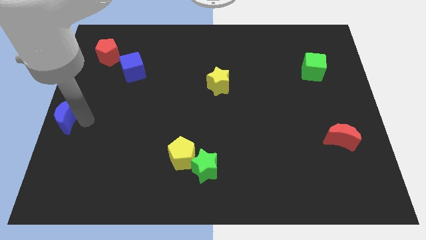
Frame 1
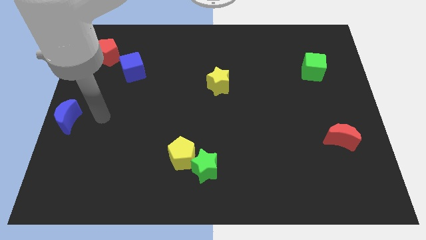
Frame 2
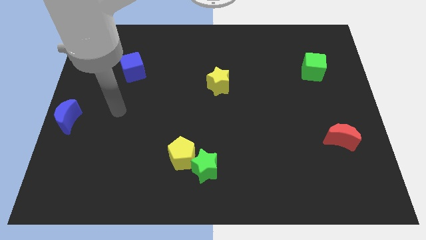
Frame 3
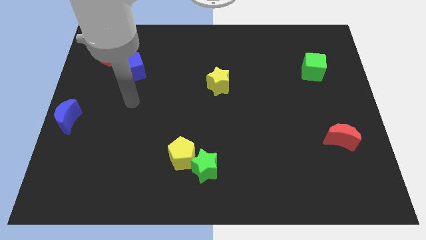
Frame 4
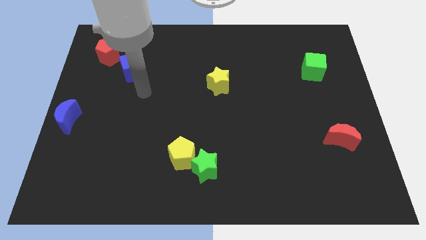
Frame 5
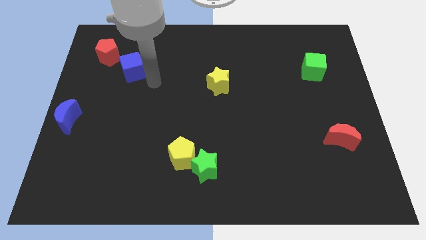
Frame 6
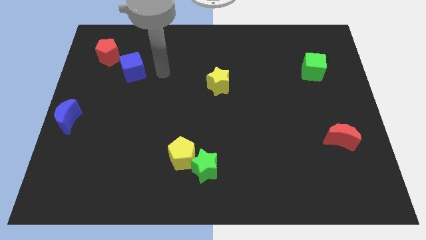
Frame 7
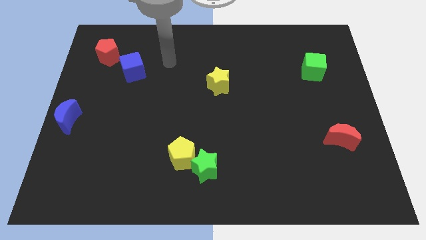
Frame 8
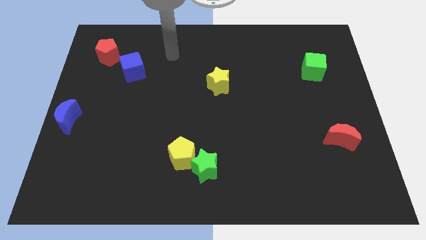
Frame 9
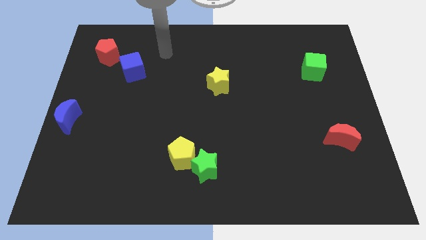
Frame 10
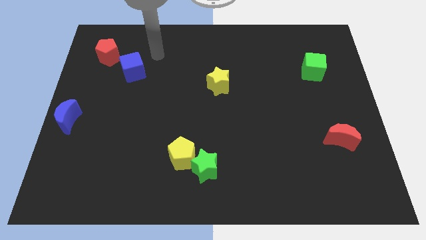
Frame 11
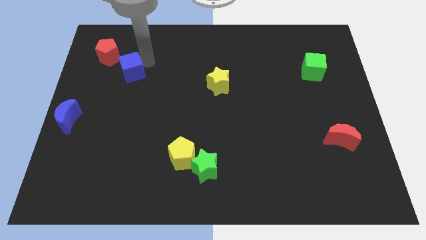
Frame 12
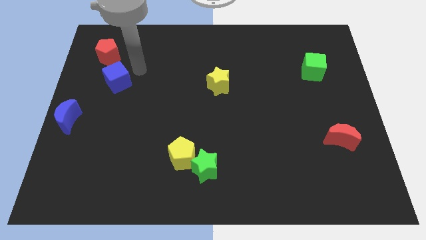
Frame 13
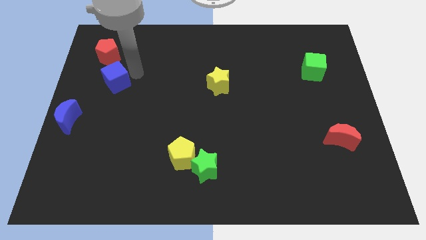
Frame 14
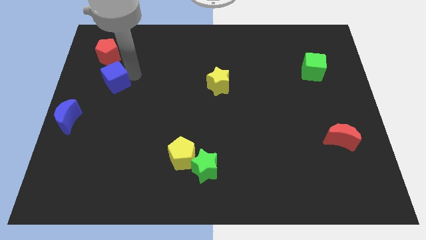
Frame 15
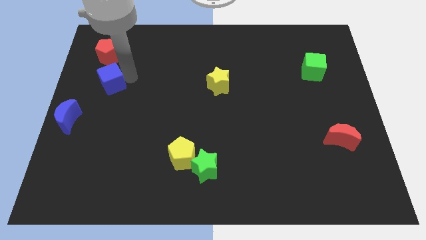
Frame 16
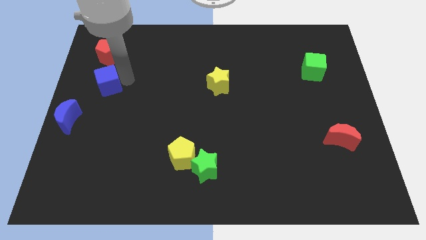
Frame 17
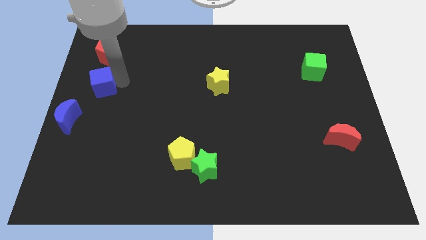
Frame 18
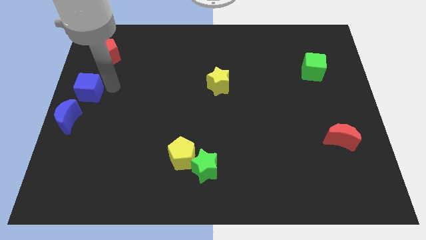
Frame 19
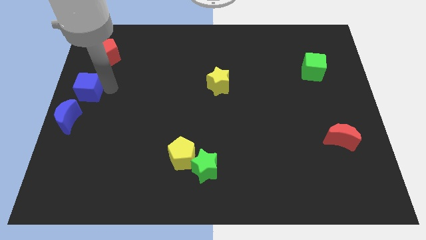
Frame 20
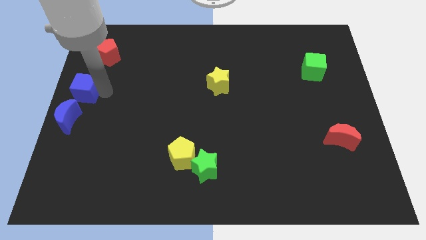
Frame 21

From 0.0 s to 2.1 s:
push the blue cube at the top side of the blue moon

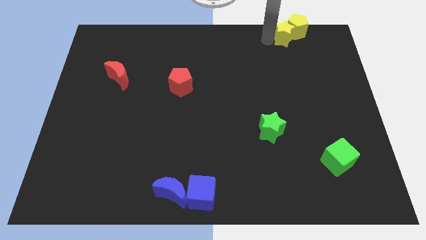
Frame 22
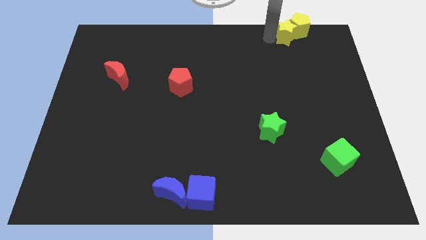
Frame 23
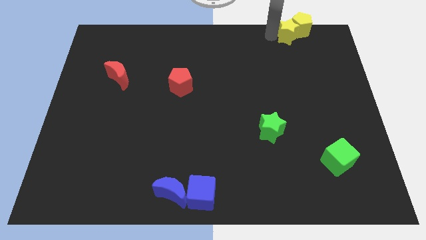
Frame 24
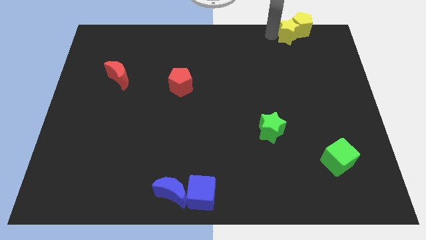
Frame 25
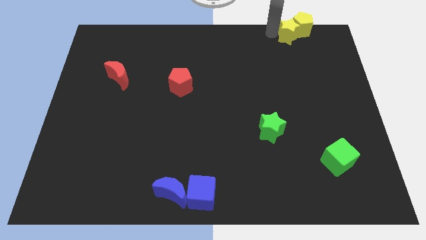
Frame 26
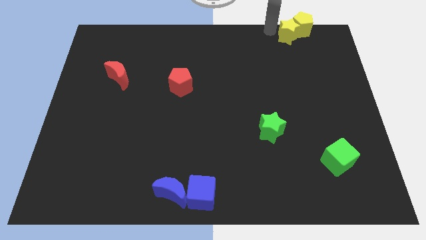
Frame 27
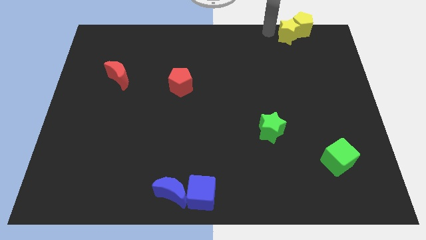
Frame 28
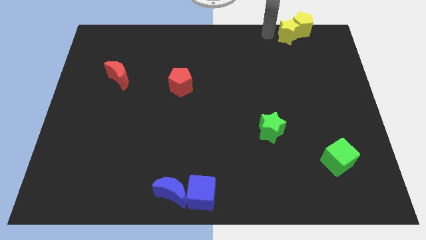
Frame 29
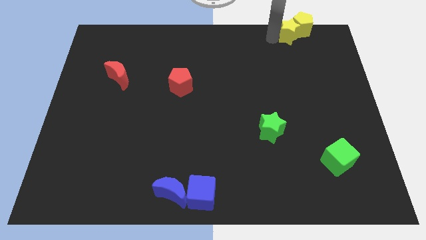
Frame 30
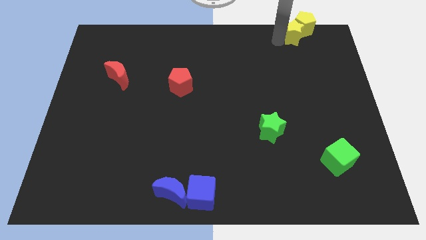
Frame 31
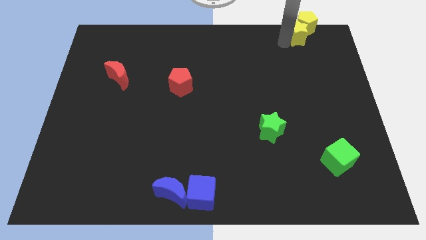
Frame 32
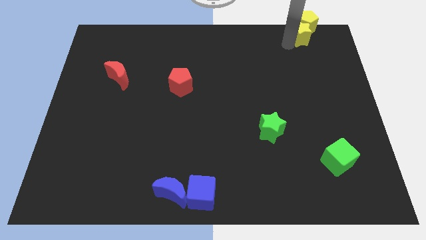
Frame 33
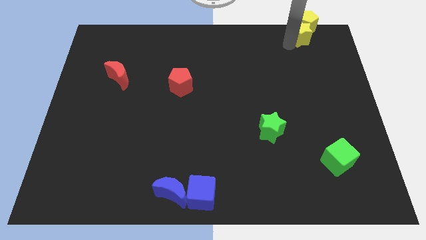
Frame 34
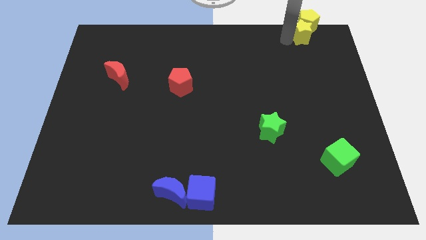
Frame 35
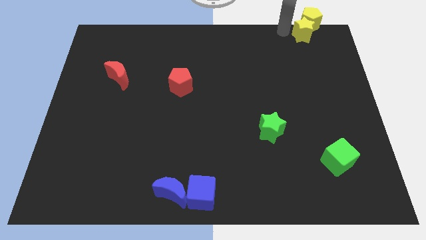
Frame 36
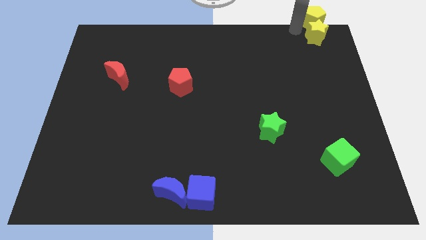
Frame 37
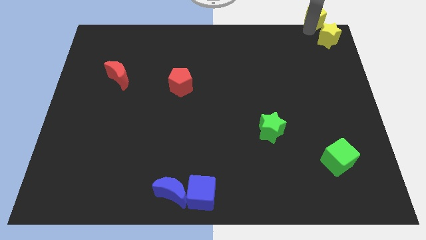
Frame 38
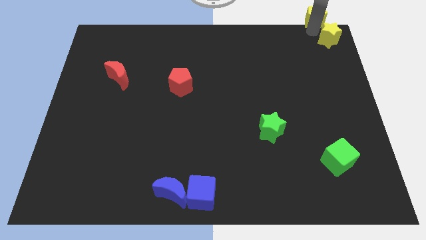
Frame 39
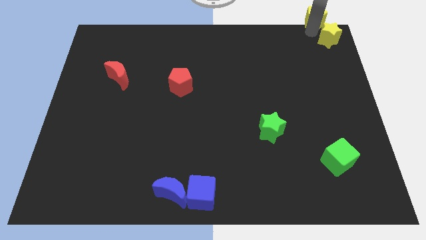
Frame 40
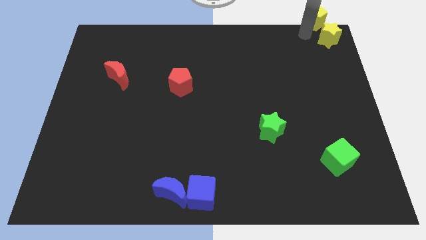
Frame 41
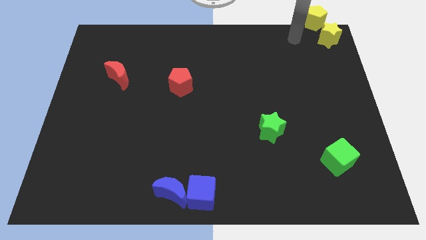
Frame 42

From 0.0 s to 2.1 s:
slide yellow blocks to the top right

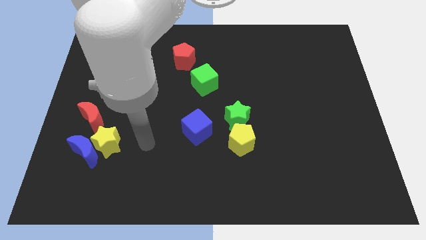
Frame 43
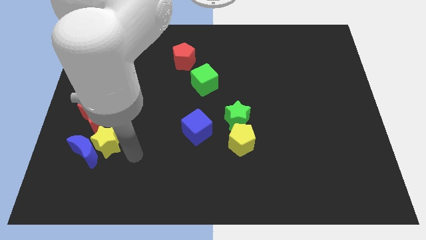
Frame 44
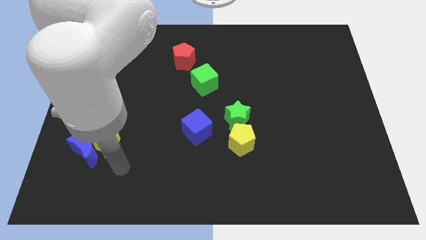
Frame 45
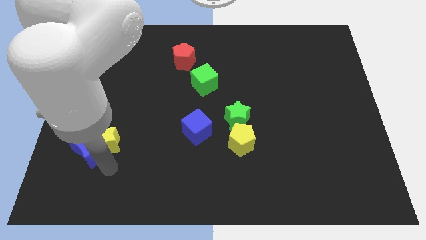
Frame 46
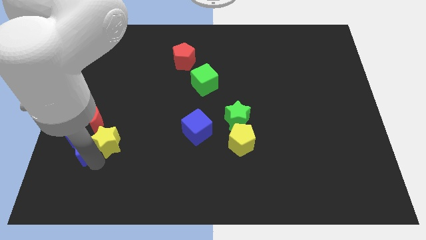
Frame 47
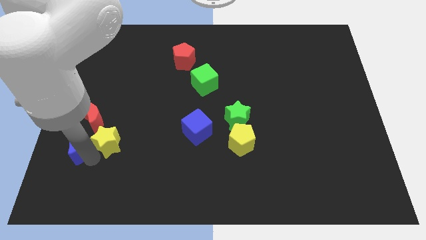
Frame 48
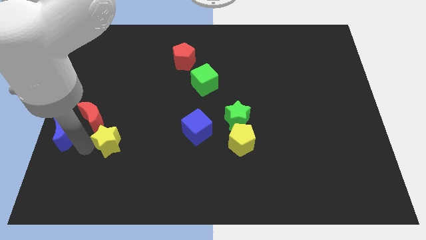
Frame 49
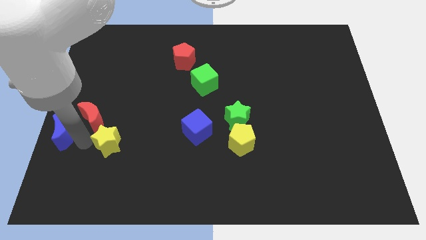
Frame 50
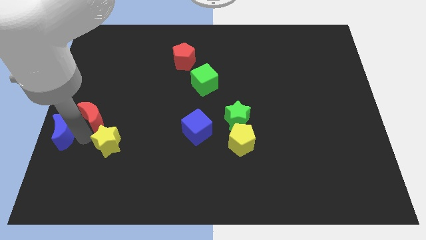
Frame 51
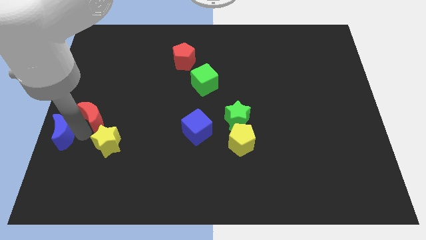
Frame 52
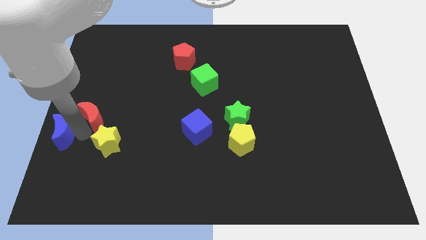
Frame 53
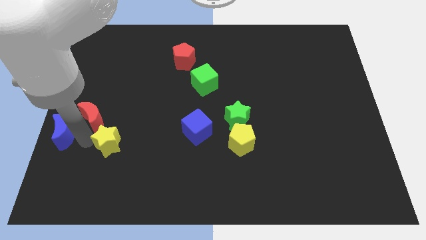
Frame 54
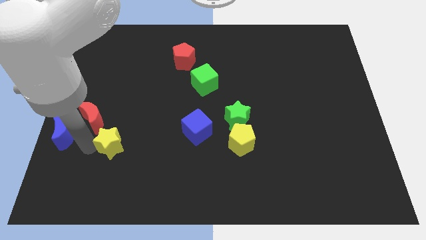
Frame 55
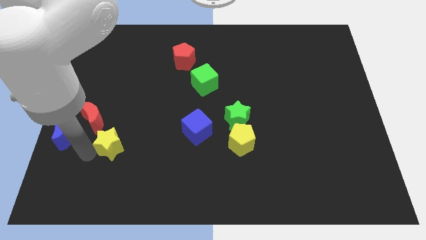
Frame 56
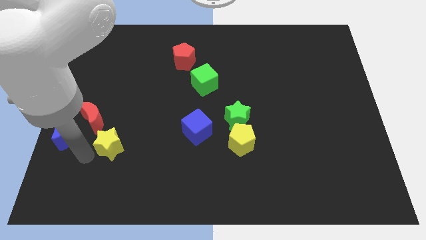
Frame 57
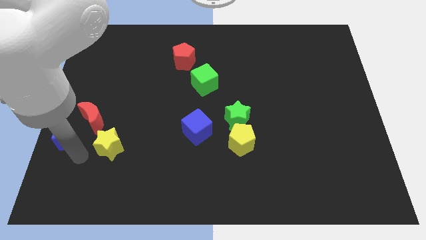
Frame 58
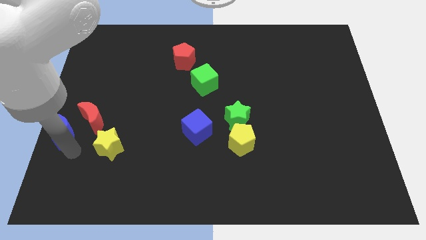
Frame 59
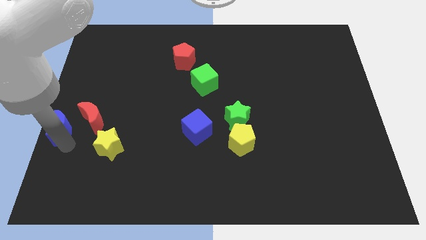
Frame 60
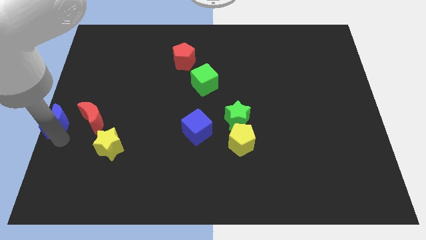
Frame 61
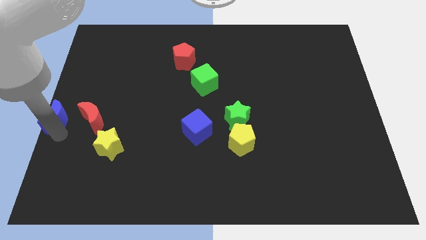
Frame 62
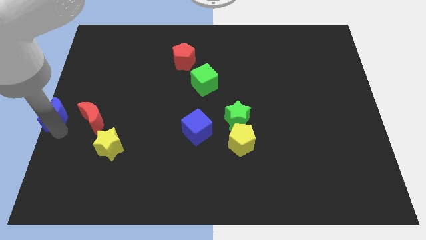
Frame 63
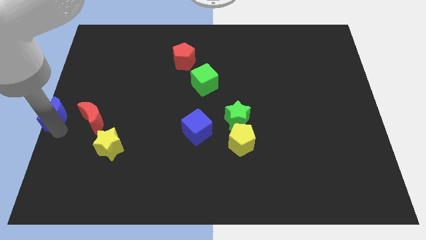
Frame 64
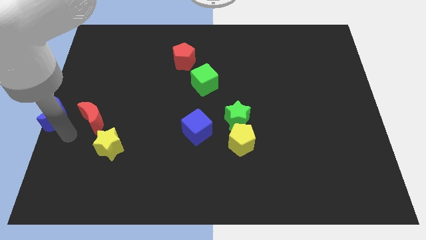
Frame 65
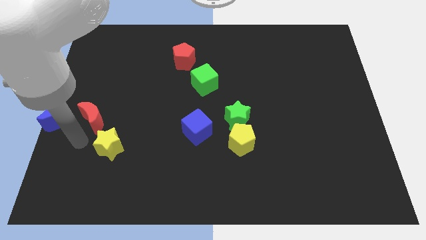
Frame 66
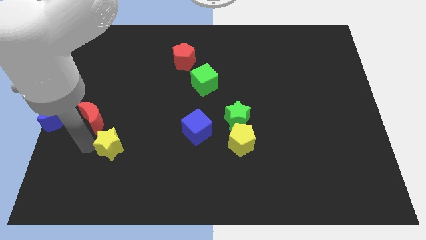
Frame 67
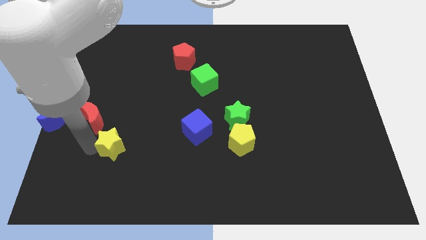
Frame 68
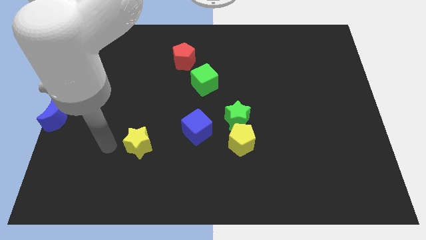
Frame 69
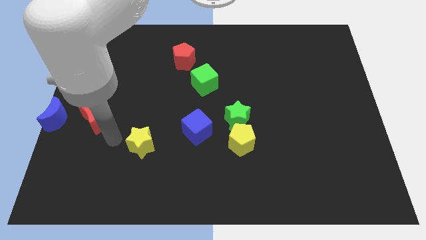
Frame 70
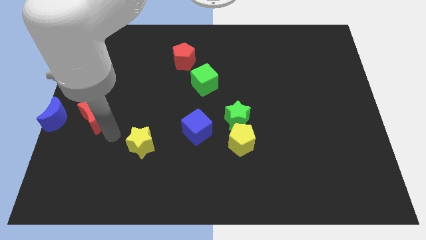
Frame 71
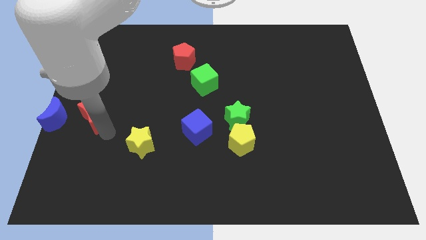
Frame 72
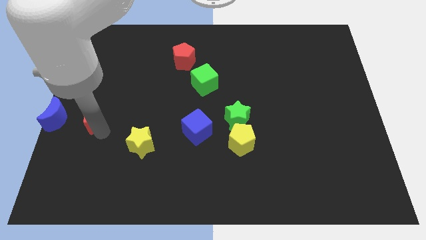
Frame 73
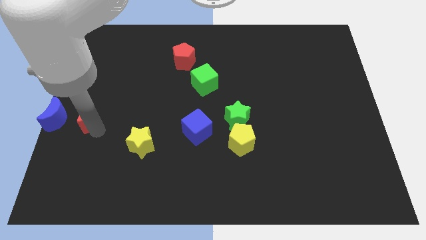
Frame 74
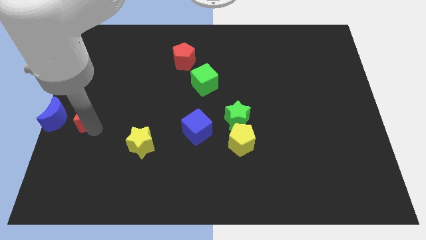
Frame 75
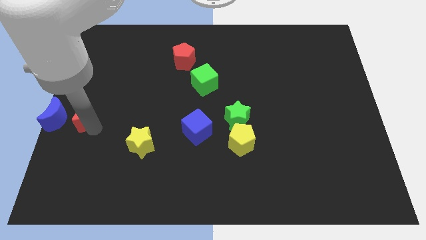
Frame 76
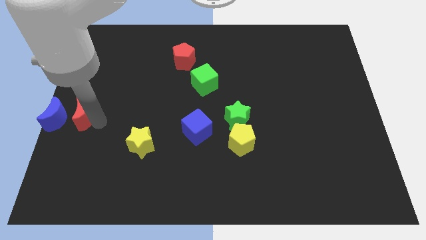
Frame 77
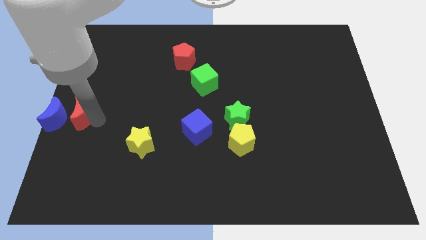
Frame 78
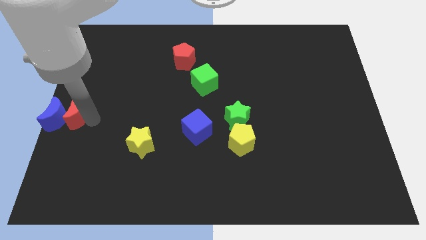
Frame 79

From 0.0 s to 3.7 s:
push the blue crescent away from the yellow star

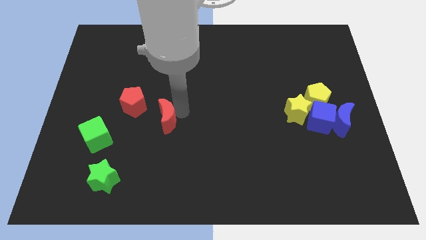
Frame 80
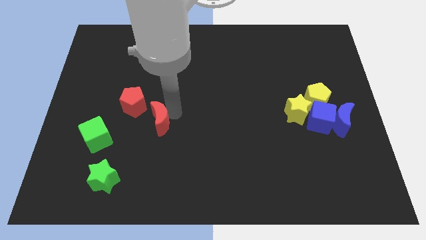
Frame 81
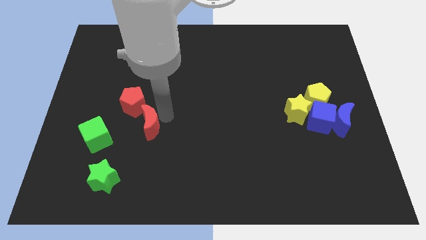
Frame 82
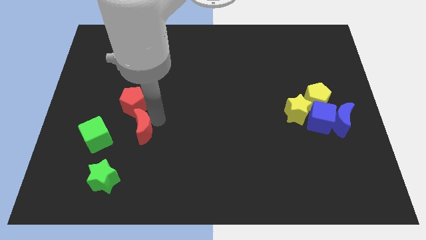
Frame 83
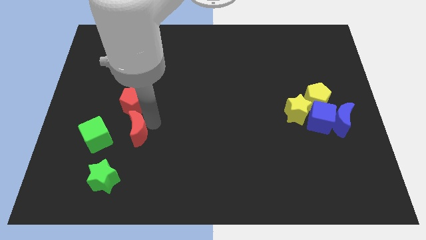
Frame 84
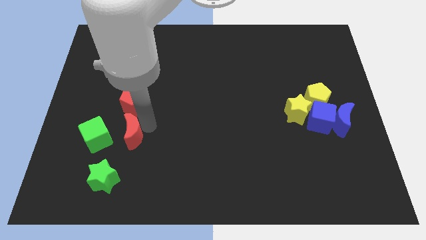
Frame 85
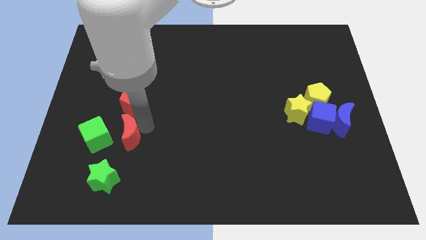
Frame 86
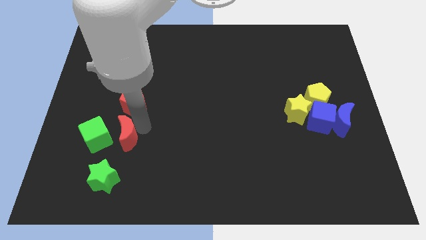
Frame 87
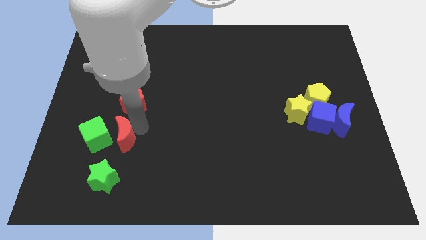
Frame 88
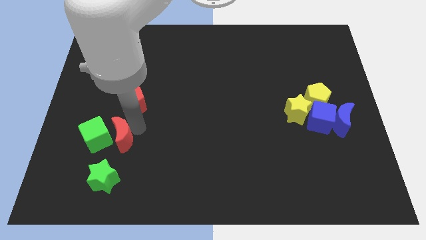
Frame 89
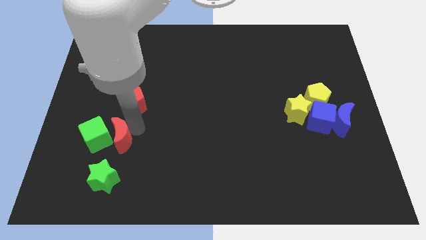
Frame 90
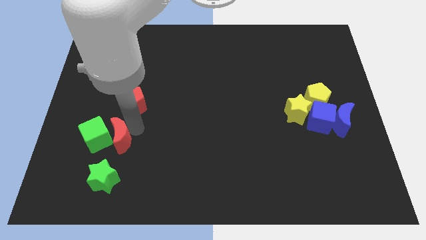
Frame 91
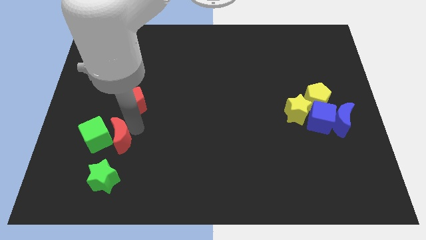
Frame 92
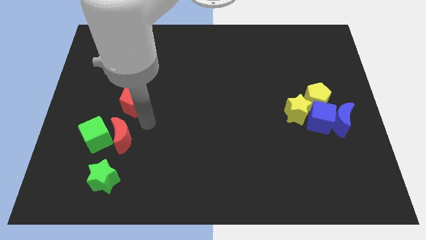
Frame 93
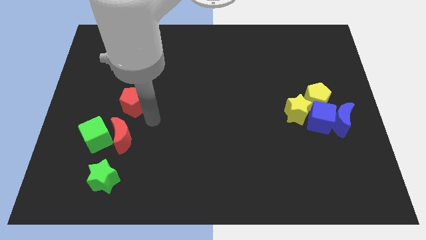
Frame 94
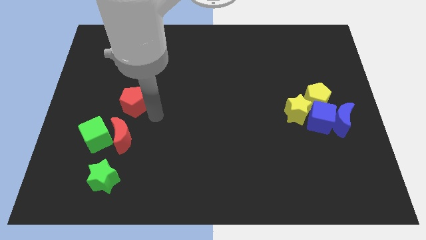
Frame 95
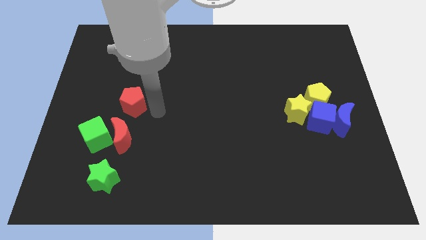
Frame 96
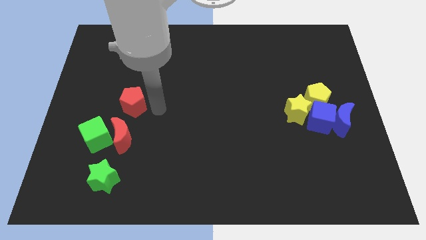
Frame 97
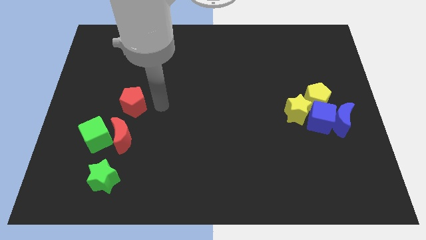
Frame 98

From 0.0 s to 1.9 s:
move the red crescent to the right side of the green cube
